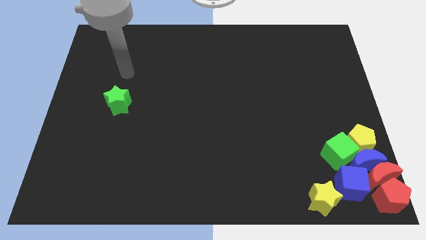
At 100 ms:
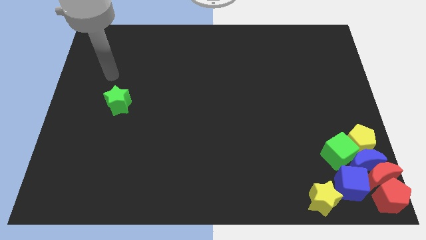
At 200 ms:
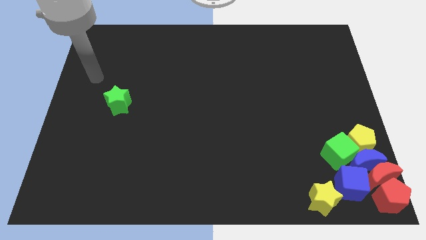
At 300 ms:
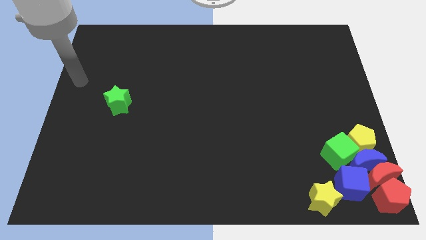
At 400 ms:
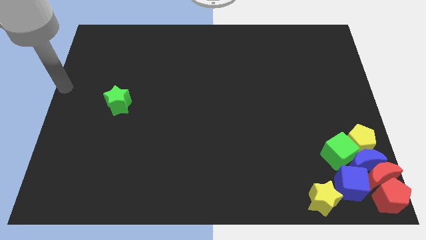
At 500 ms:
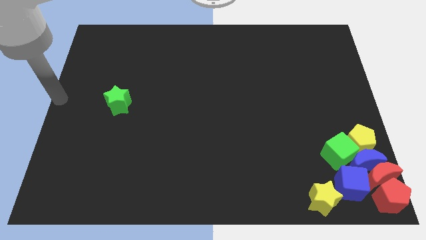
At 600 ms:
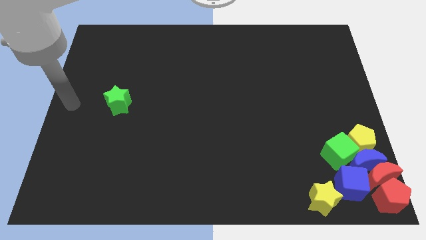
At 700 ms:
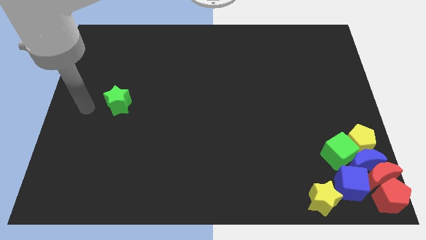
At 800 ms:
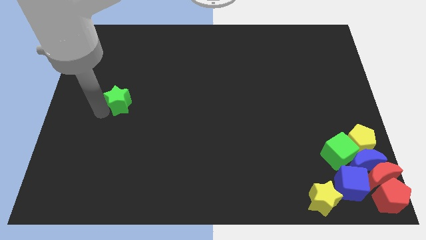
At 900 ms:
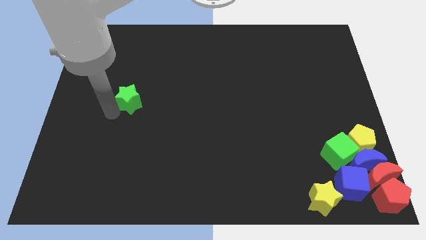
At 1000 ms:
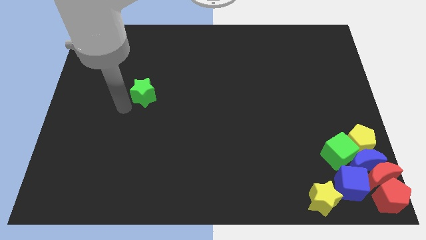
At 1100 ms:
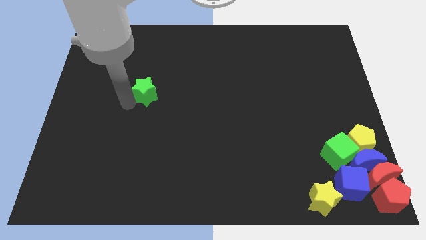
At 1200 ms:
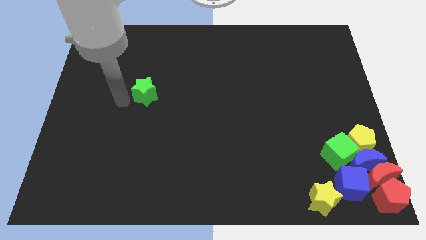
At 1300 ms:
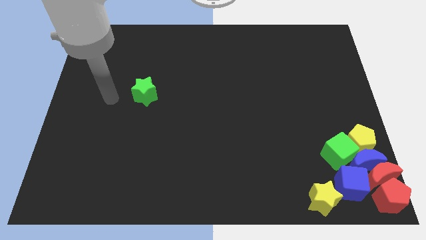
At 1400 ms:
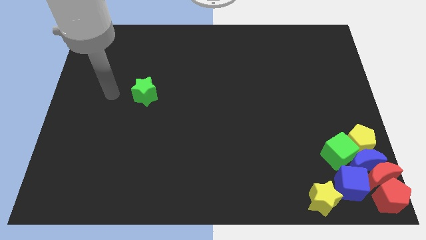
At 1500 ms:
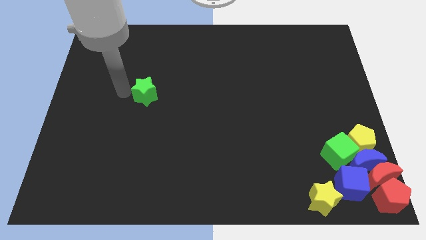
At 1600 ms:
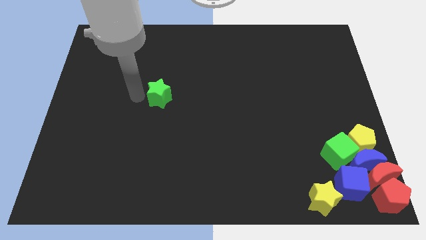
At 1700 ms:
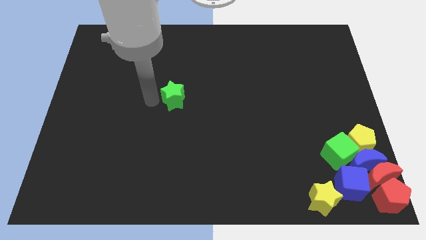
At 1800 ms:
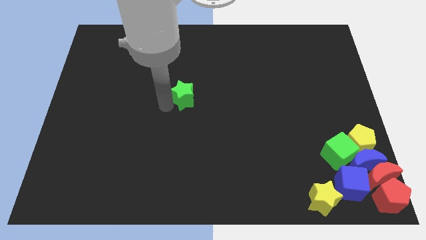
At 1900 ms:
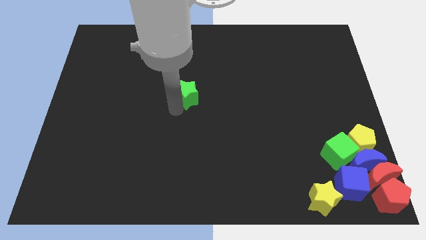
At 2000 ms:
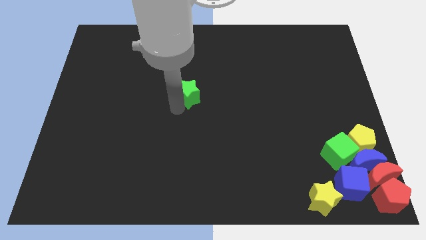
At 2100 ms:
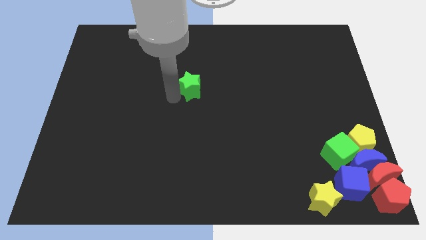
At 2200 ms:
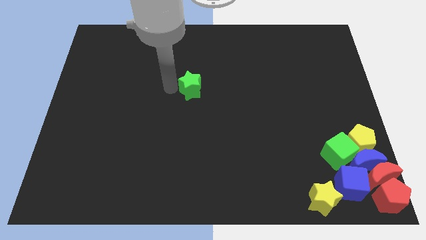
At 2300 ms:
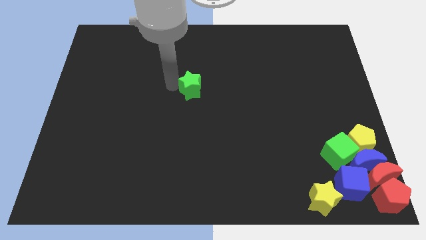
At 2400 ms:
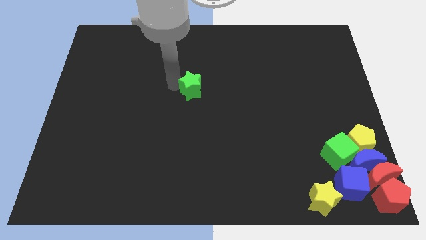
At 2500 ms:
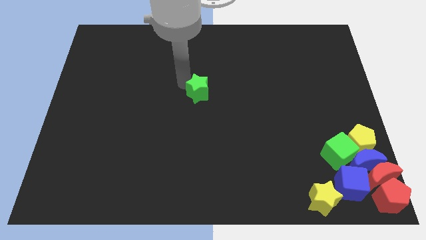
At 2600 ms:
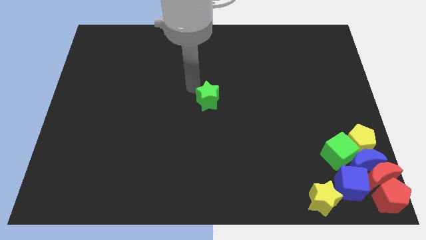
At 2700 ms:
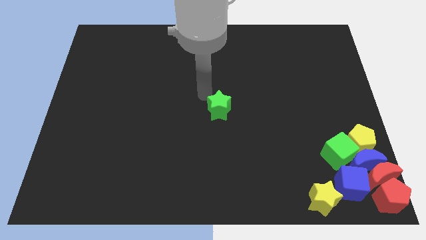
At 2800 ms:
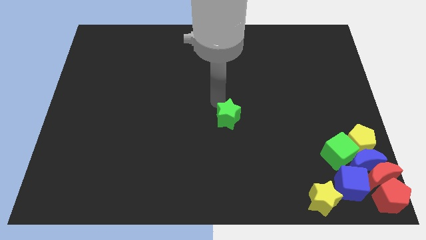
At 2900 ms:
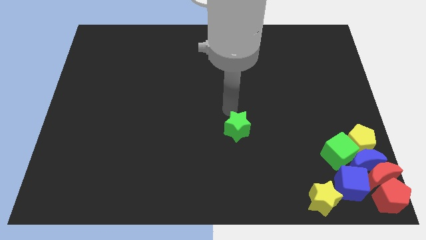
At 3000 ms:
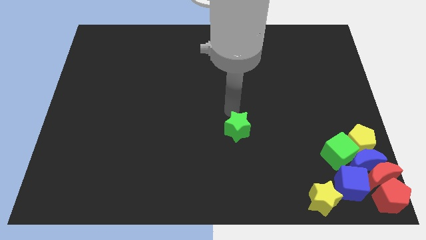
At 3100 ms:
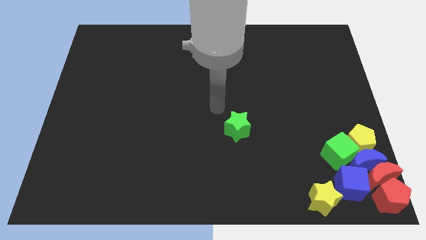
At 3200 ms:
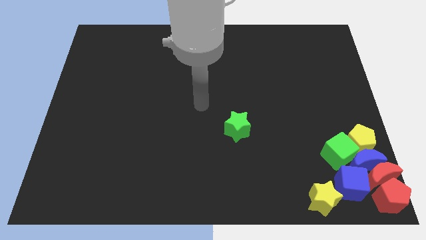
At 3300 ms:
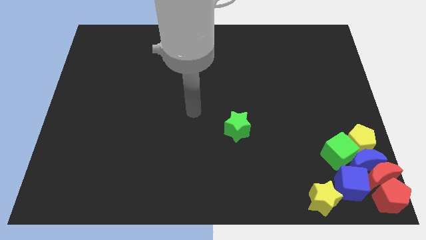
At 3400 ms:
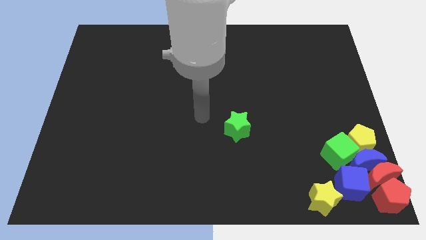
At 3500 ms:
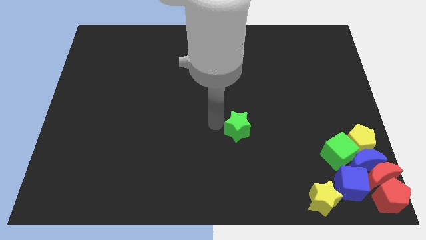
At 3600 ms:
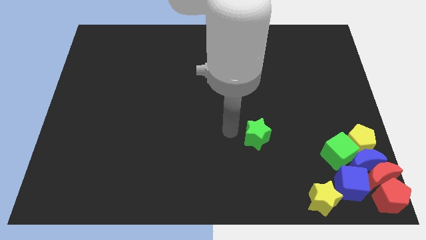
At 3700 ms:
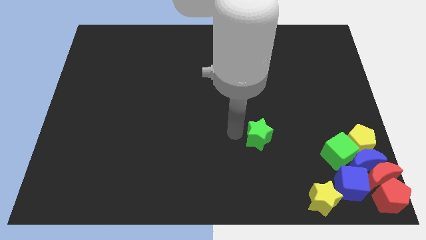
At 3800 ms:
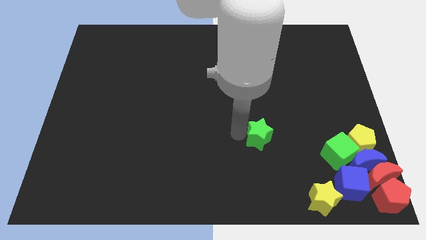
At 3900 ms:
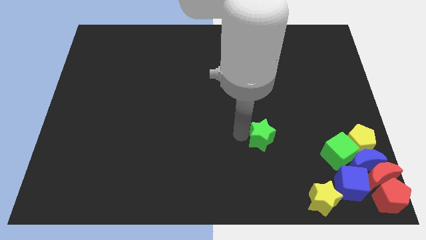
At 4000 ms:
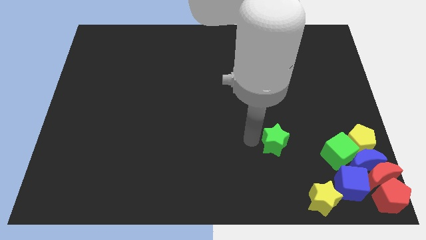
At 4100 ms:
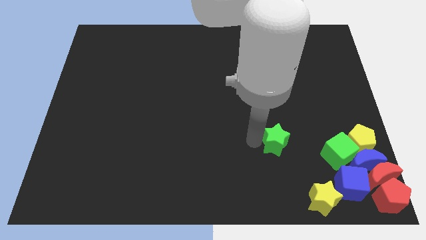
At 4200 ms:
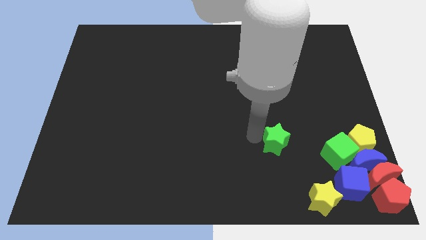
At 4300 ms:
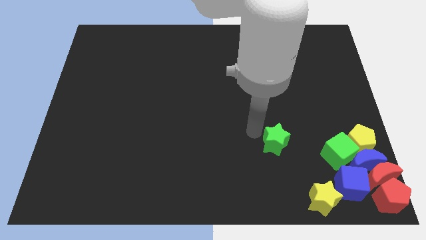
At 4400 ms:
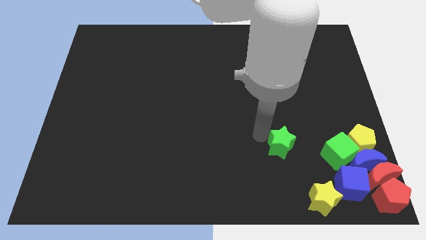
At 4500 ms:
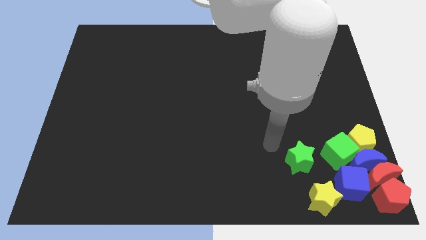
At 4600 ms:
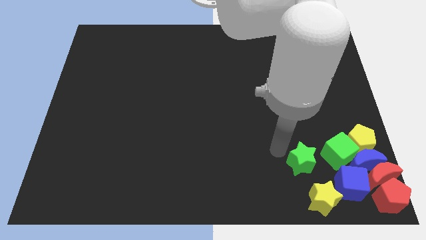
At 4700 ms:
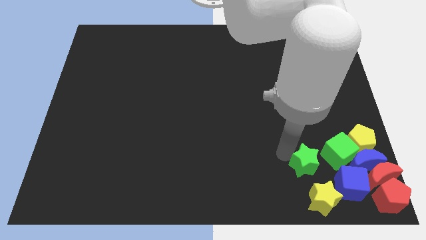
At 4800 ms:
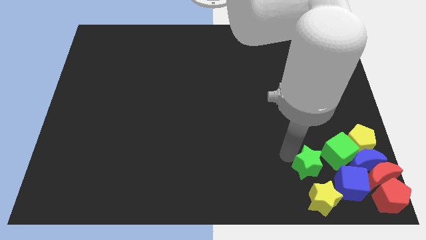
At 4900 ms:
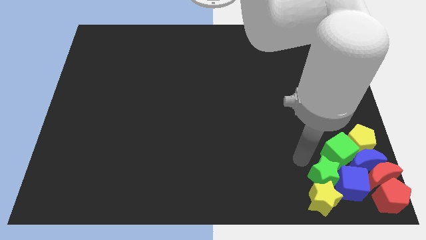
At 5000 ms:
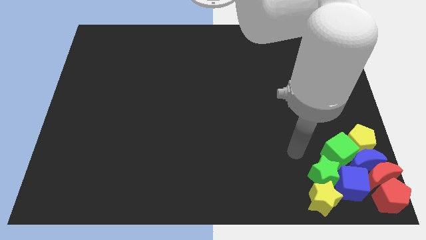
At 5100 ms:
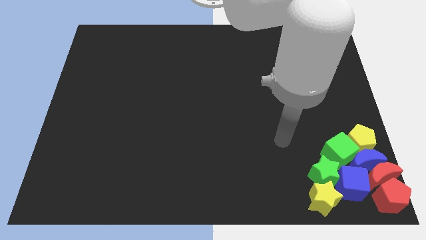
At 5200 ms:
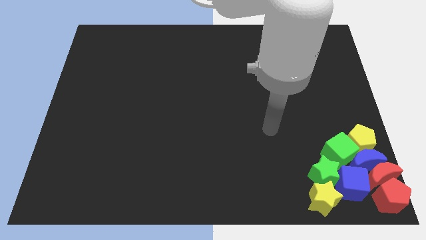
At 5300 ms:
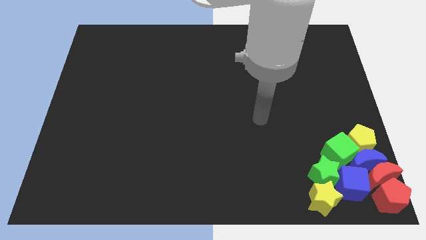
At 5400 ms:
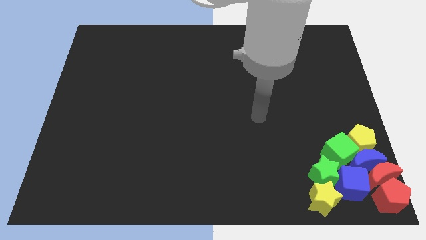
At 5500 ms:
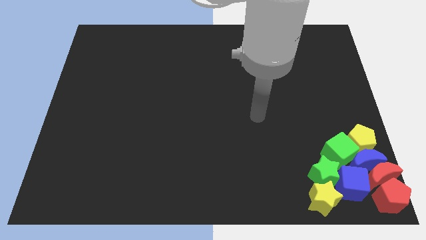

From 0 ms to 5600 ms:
place the green star at the top of the yellow star

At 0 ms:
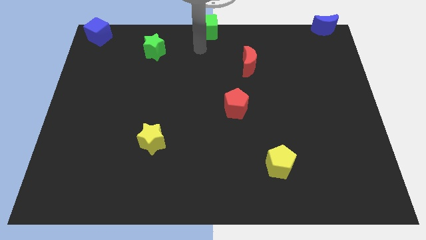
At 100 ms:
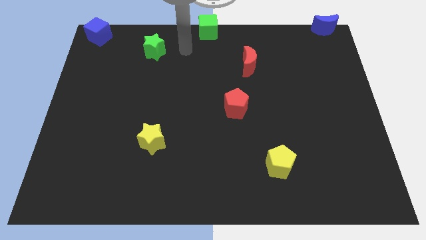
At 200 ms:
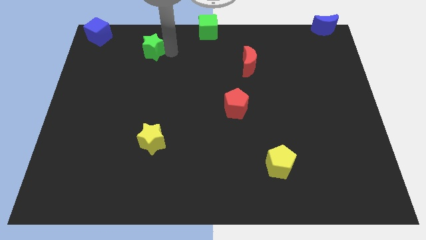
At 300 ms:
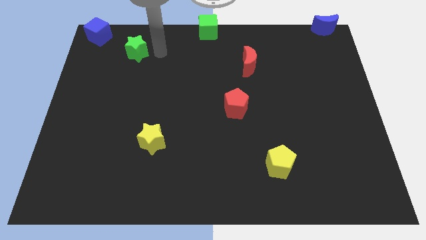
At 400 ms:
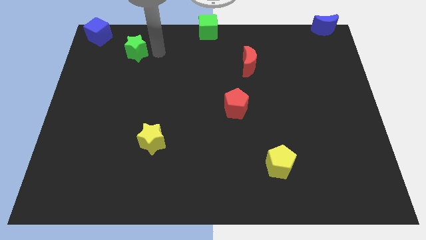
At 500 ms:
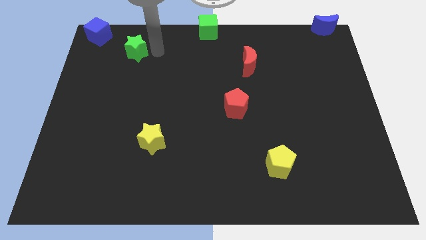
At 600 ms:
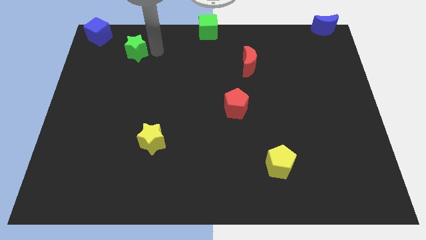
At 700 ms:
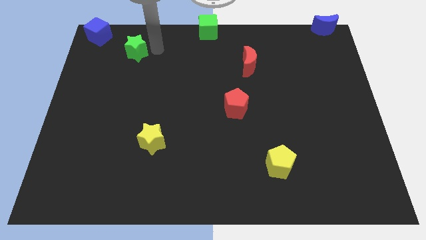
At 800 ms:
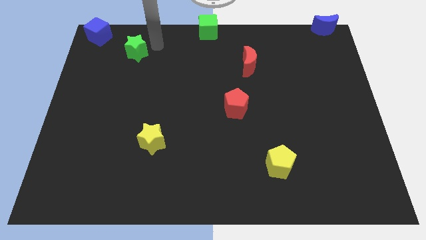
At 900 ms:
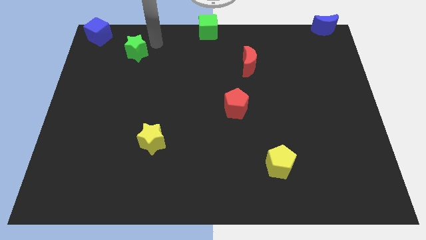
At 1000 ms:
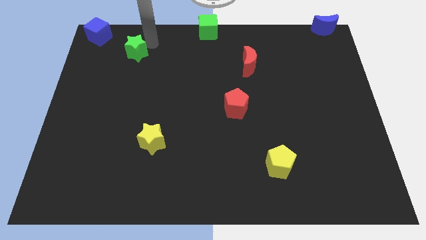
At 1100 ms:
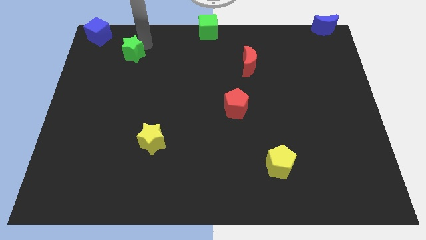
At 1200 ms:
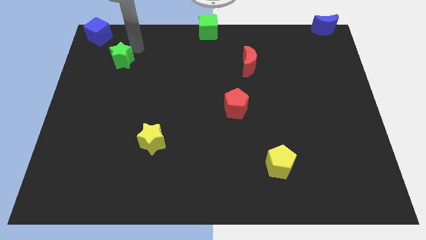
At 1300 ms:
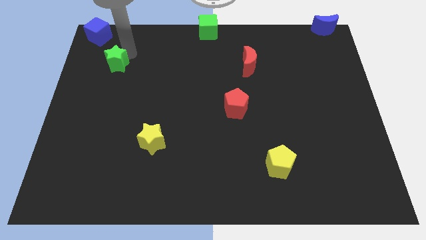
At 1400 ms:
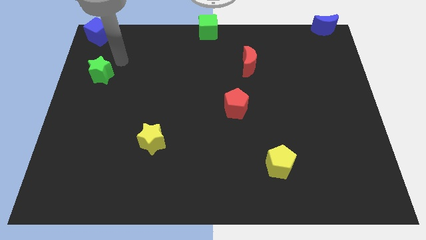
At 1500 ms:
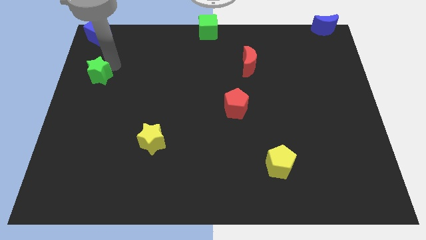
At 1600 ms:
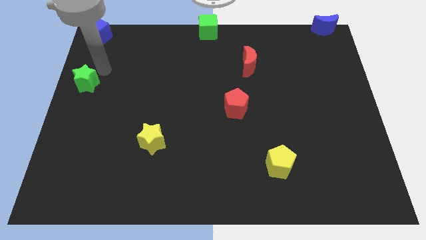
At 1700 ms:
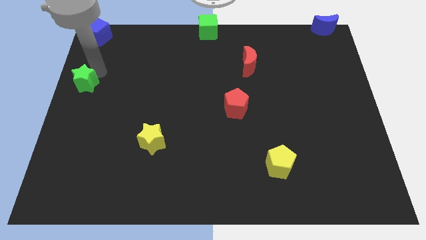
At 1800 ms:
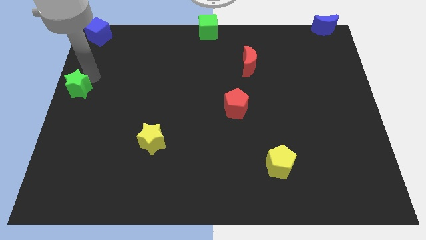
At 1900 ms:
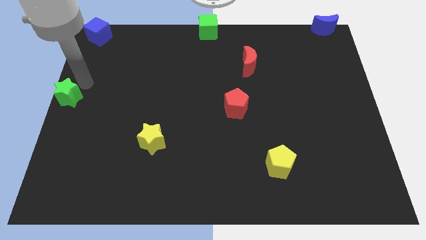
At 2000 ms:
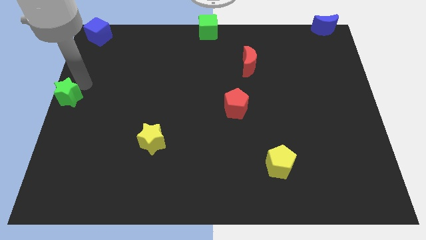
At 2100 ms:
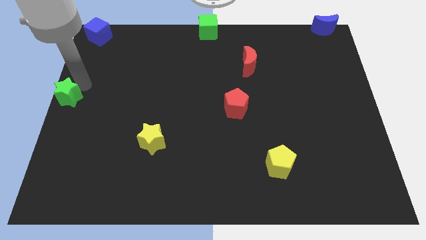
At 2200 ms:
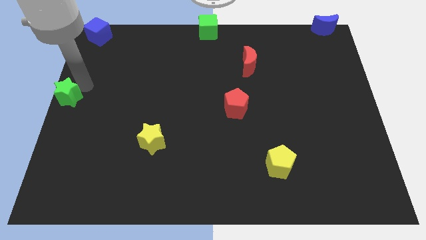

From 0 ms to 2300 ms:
move the green star to the center left

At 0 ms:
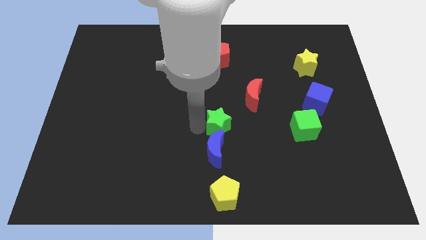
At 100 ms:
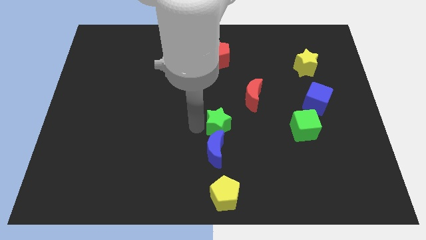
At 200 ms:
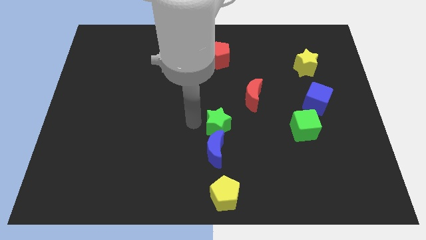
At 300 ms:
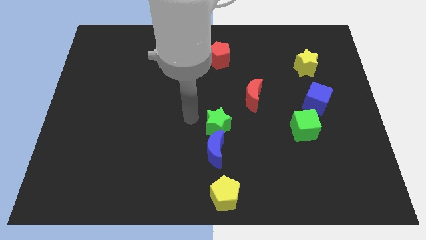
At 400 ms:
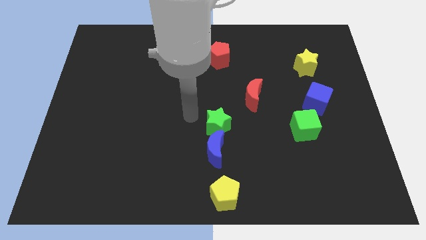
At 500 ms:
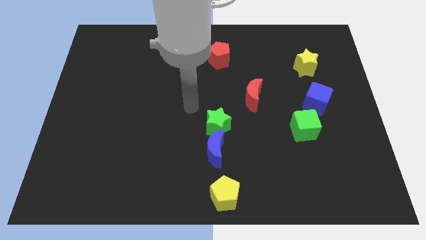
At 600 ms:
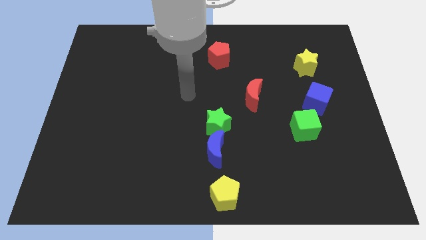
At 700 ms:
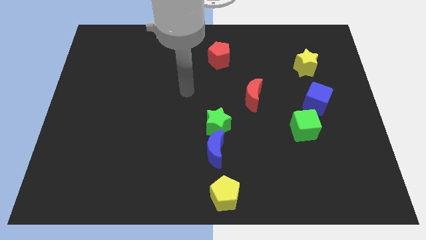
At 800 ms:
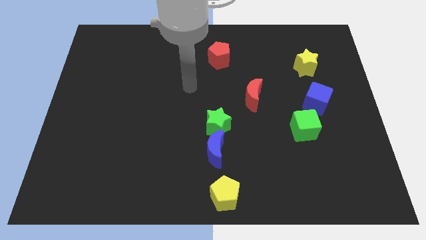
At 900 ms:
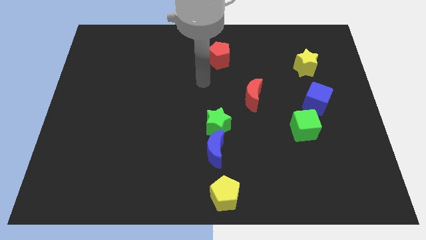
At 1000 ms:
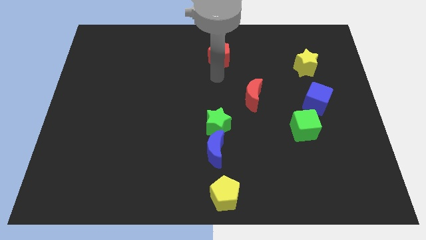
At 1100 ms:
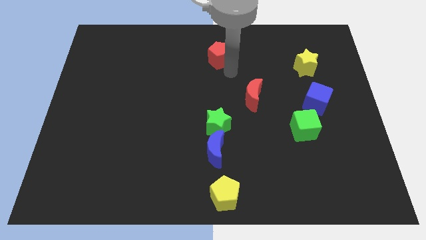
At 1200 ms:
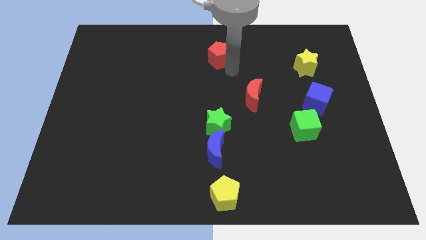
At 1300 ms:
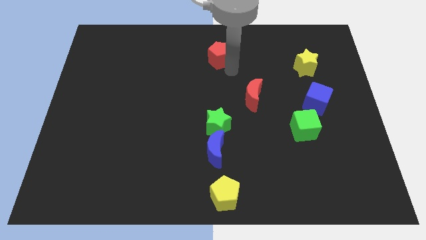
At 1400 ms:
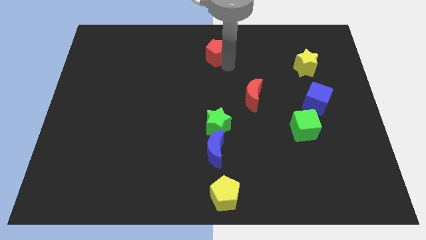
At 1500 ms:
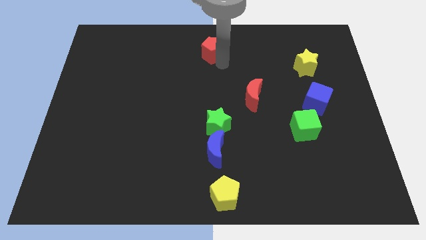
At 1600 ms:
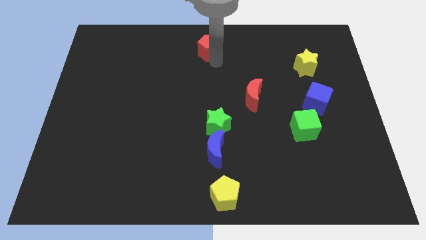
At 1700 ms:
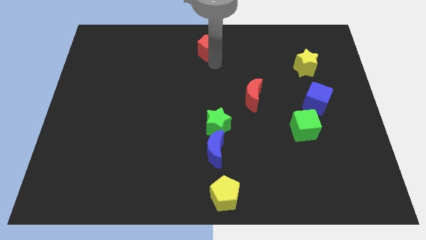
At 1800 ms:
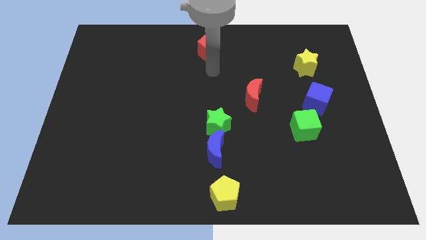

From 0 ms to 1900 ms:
push the red pentagon towards the top center of the board
